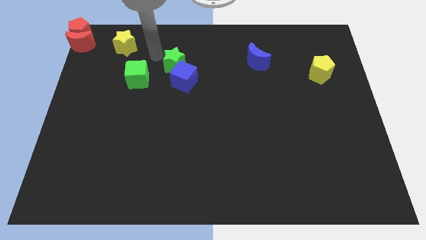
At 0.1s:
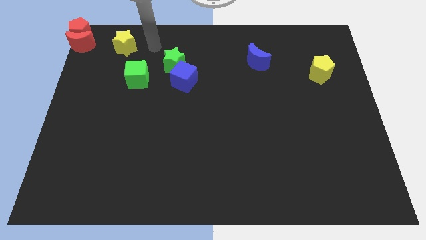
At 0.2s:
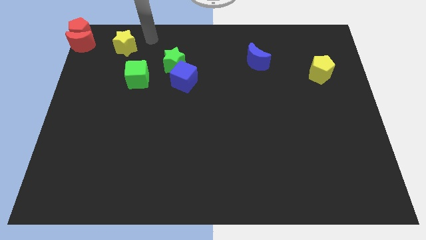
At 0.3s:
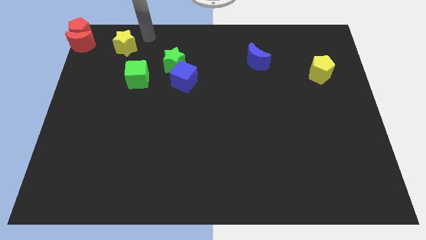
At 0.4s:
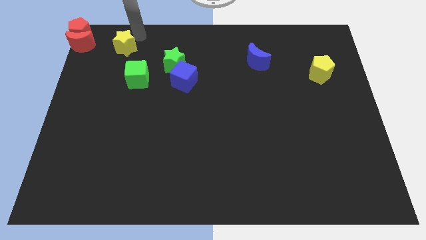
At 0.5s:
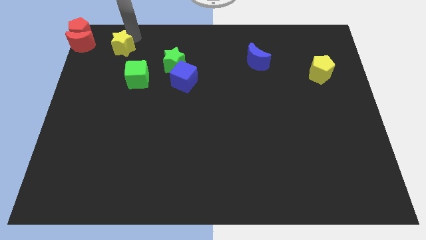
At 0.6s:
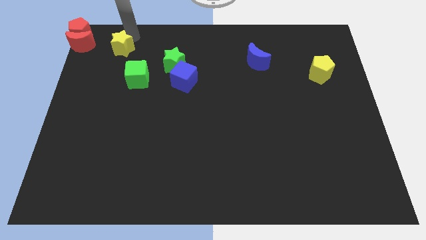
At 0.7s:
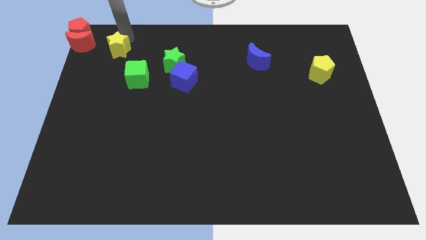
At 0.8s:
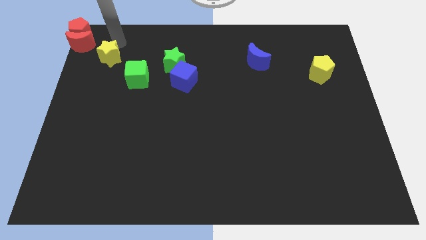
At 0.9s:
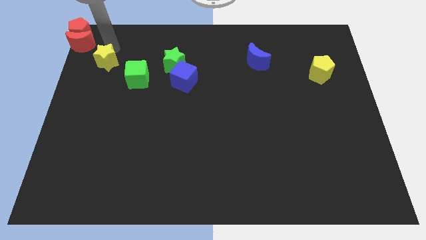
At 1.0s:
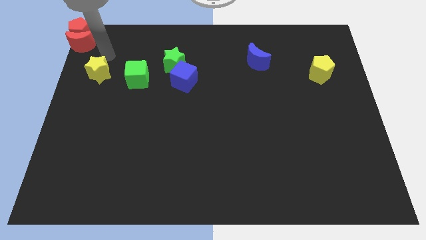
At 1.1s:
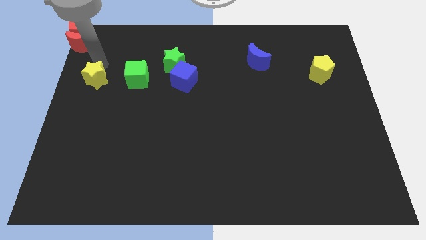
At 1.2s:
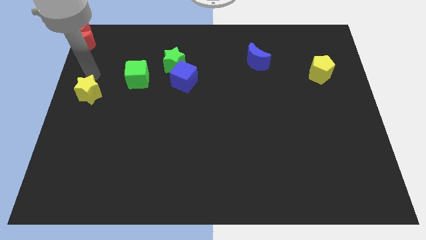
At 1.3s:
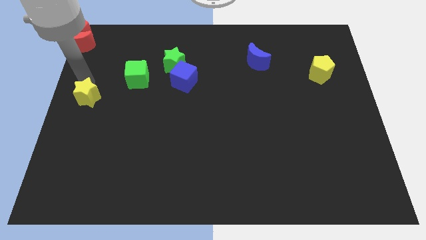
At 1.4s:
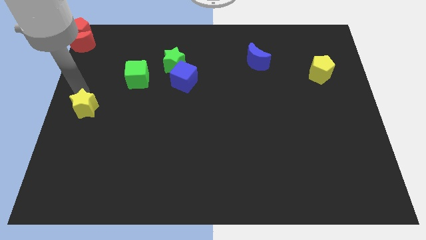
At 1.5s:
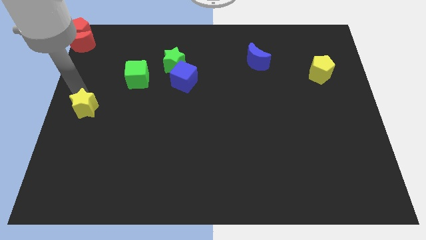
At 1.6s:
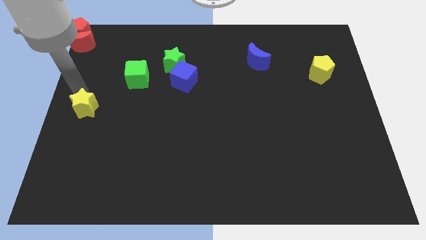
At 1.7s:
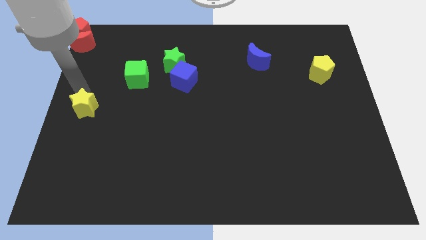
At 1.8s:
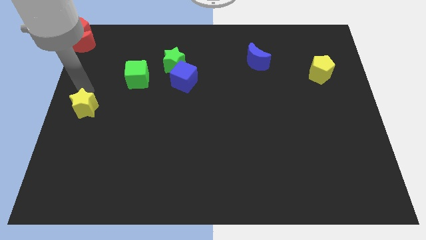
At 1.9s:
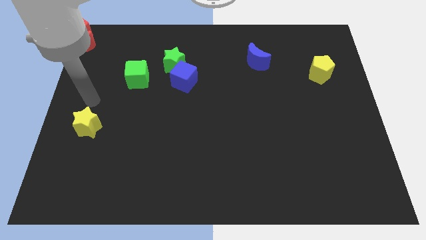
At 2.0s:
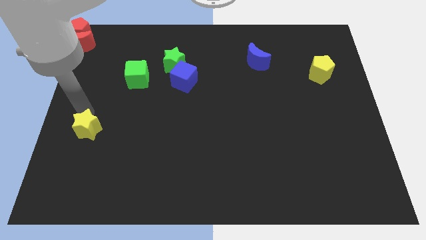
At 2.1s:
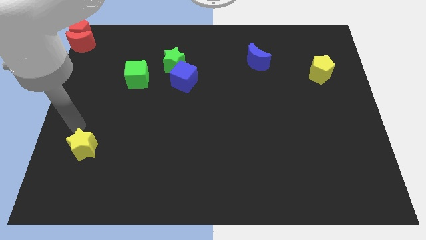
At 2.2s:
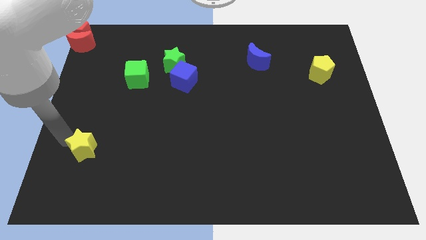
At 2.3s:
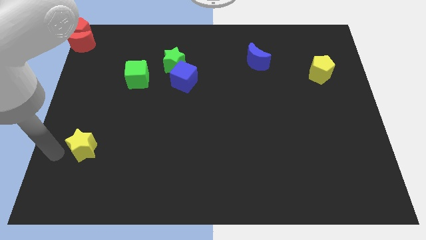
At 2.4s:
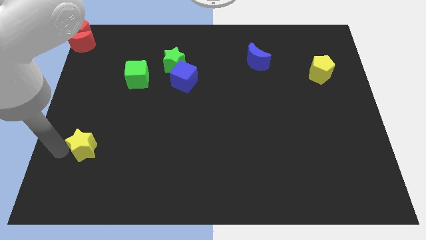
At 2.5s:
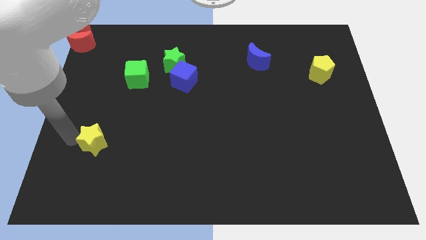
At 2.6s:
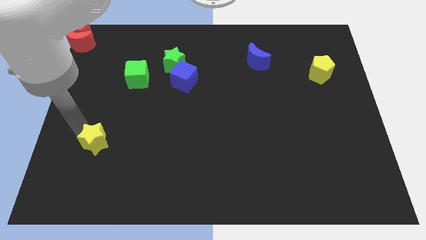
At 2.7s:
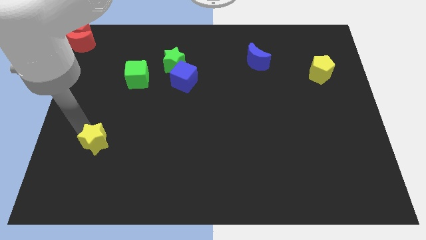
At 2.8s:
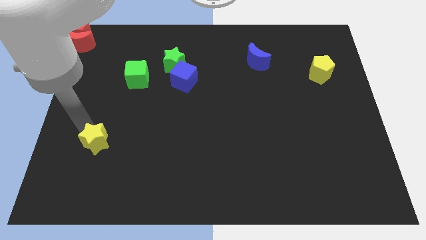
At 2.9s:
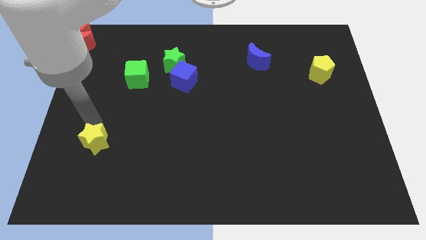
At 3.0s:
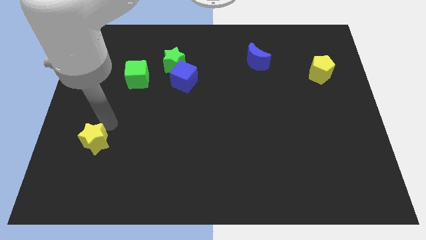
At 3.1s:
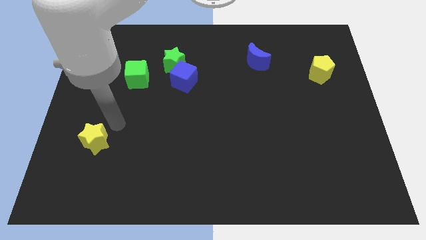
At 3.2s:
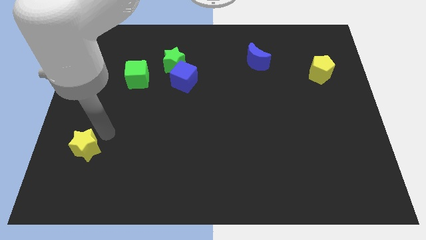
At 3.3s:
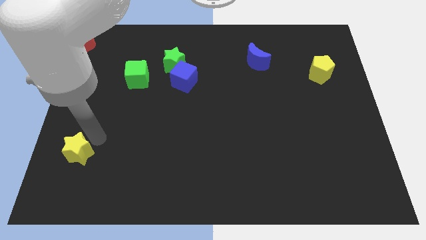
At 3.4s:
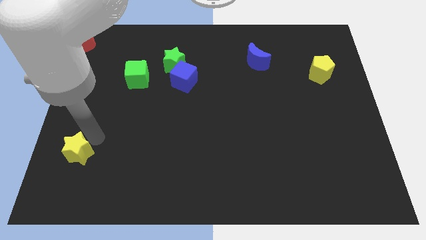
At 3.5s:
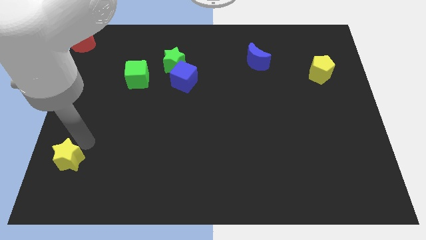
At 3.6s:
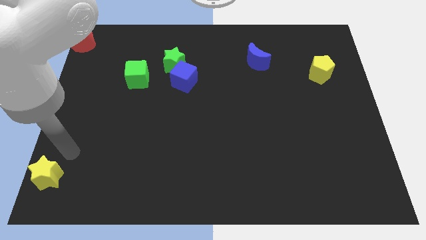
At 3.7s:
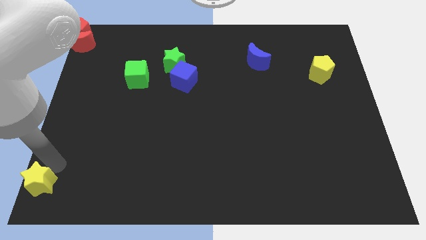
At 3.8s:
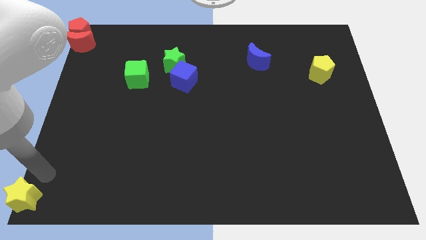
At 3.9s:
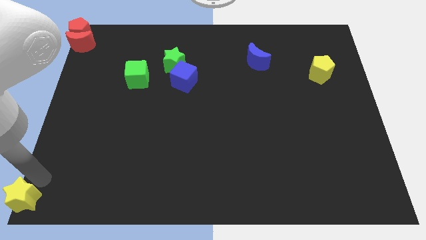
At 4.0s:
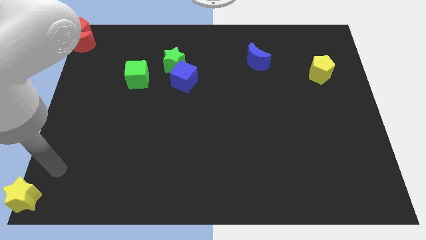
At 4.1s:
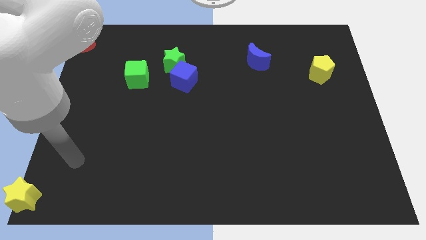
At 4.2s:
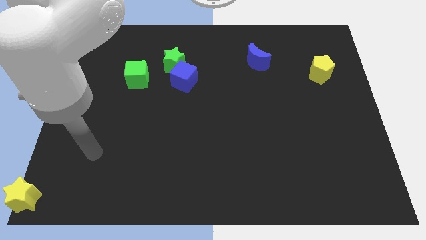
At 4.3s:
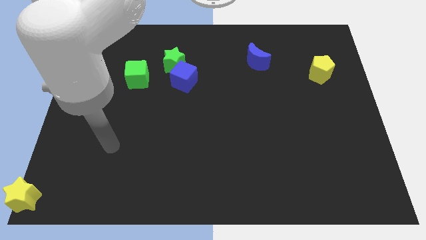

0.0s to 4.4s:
push the yellow star to the bottom left to the board

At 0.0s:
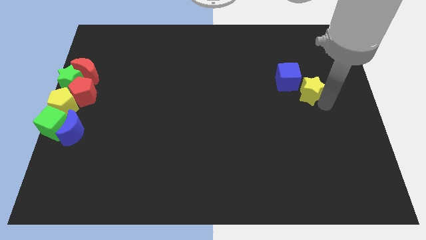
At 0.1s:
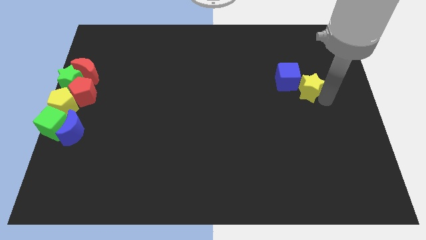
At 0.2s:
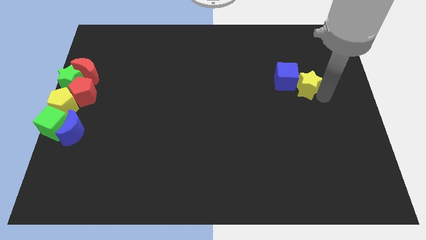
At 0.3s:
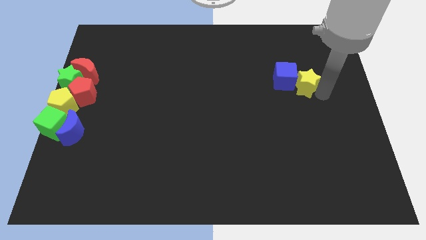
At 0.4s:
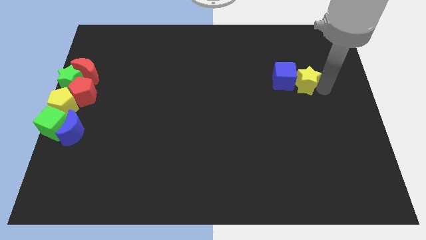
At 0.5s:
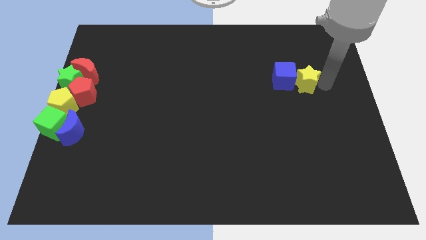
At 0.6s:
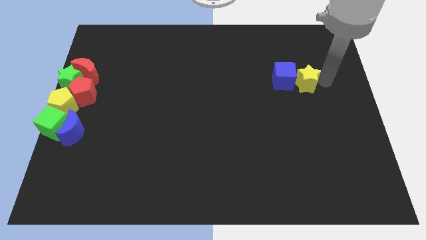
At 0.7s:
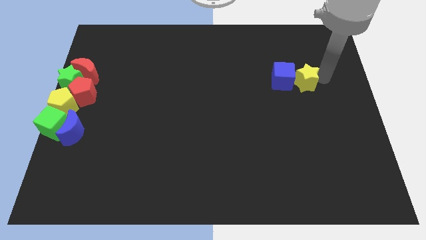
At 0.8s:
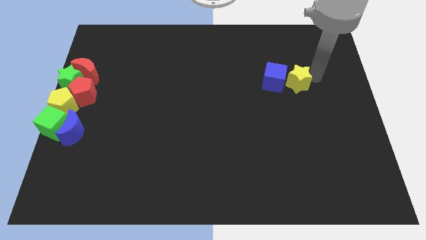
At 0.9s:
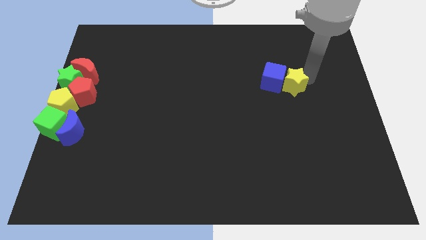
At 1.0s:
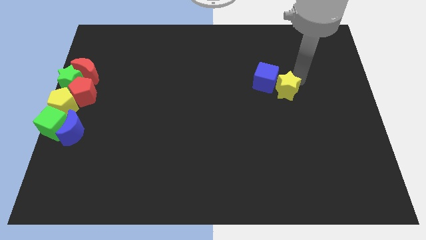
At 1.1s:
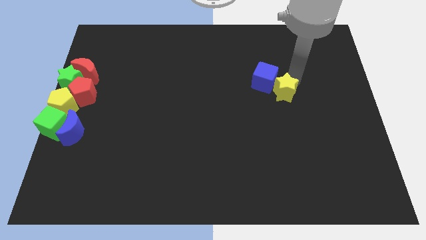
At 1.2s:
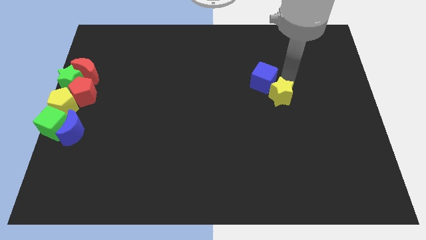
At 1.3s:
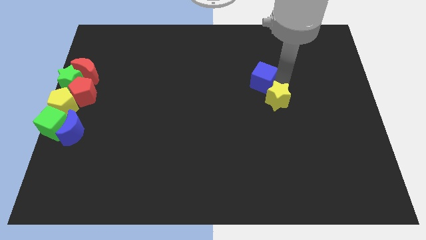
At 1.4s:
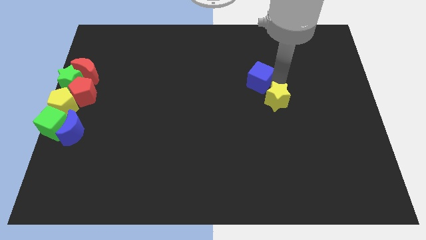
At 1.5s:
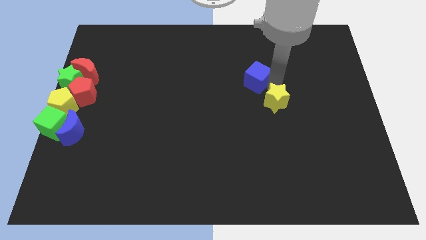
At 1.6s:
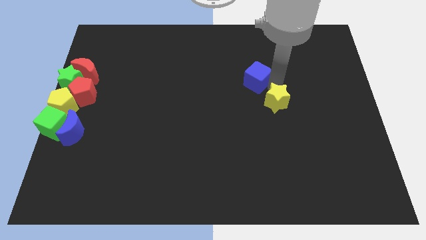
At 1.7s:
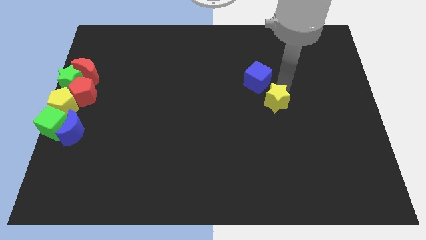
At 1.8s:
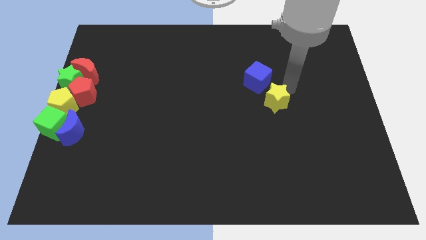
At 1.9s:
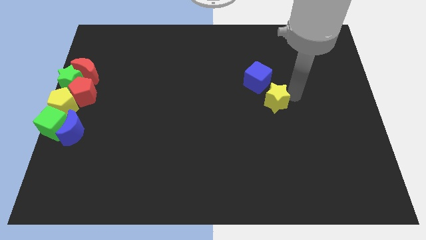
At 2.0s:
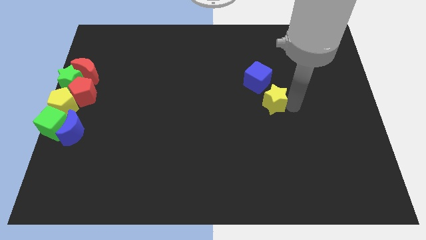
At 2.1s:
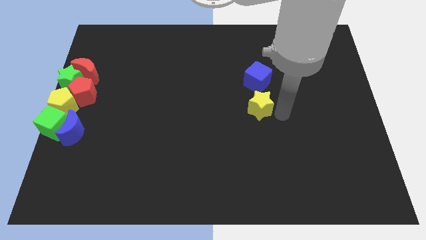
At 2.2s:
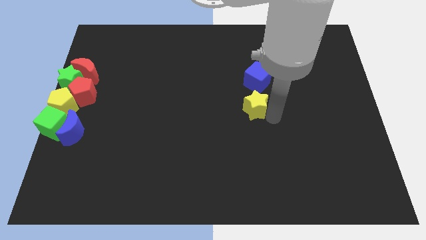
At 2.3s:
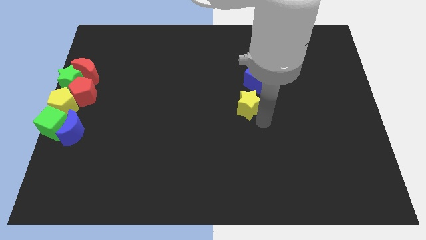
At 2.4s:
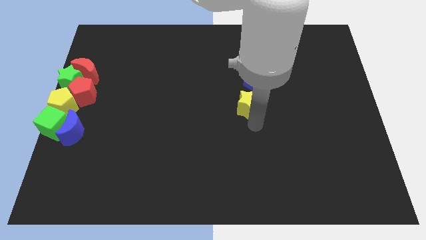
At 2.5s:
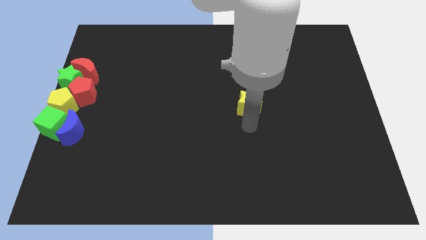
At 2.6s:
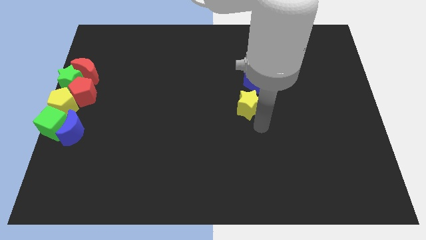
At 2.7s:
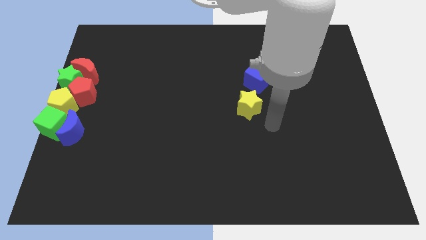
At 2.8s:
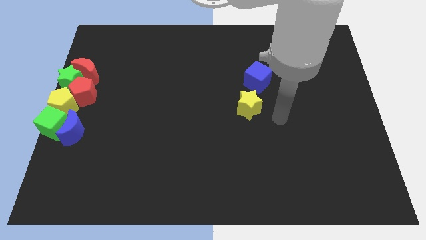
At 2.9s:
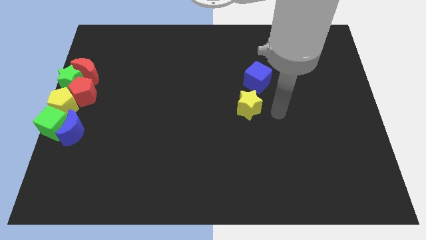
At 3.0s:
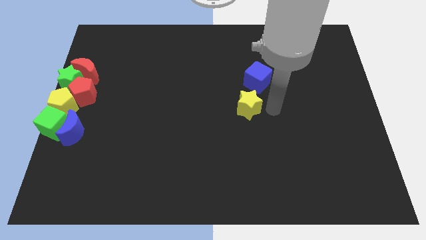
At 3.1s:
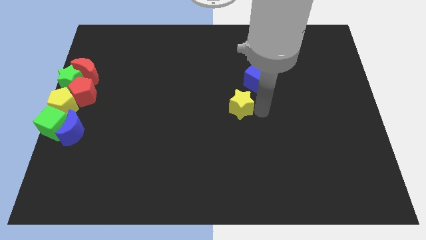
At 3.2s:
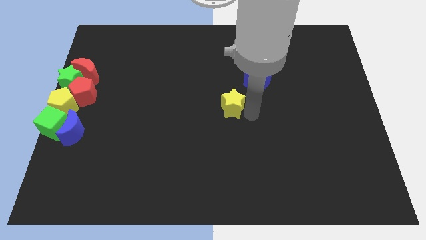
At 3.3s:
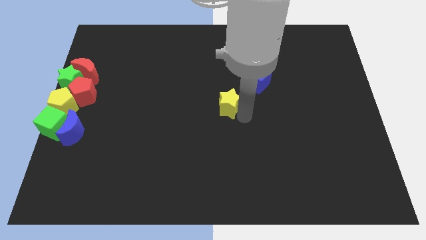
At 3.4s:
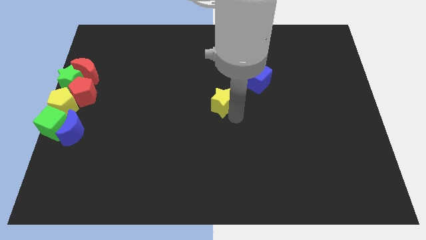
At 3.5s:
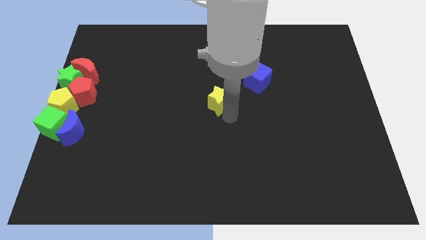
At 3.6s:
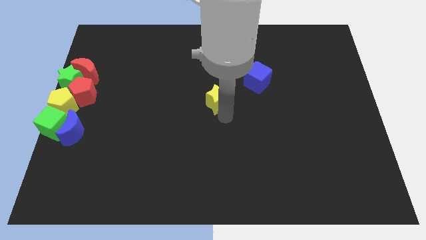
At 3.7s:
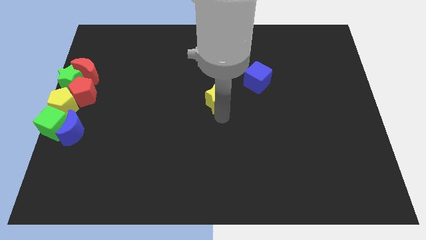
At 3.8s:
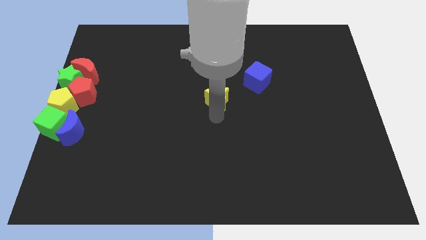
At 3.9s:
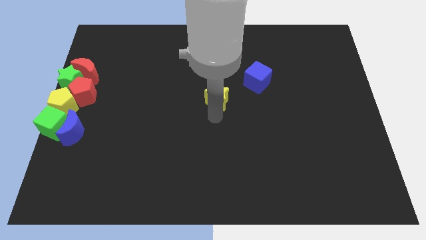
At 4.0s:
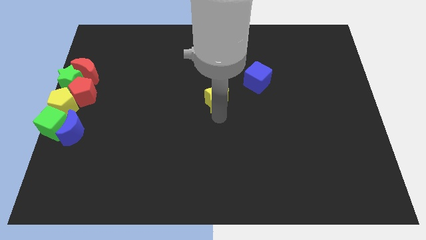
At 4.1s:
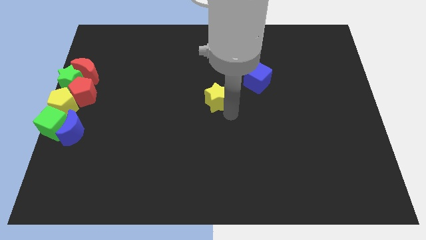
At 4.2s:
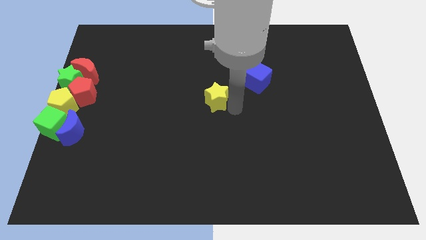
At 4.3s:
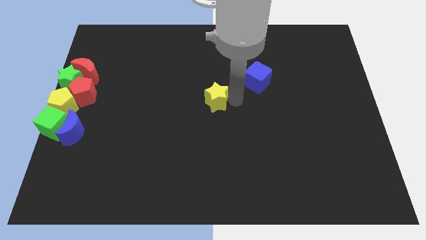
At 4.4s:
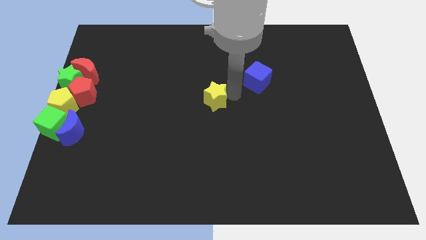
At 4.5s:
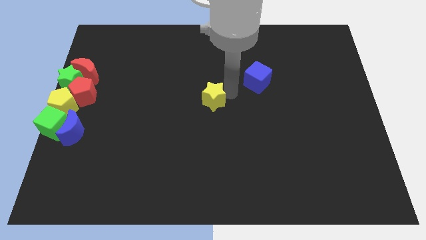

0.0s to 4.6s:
move the yellow star to the center of the board

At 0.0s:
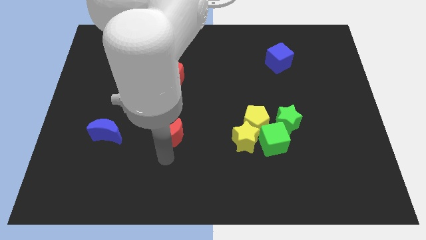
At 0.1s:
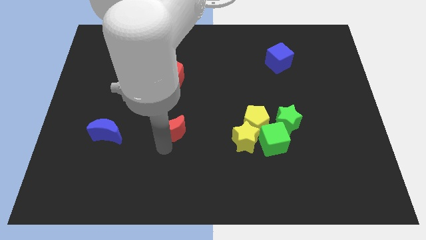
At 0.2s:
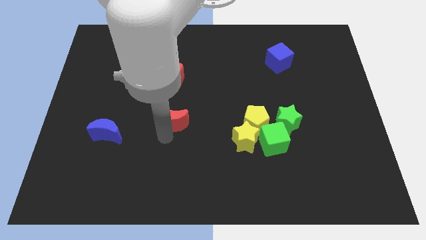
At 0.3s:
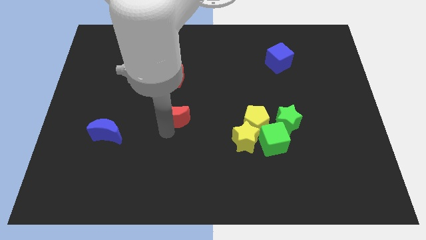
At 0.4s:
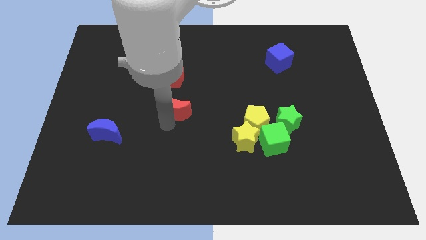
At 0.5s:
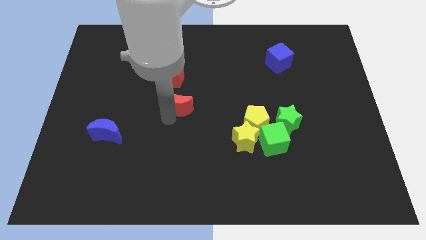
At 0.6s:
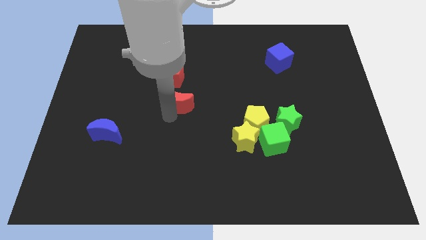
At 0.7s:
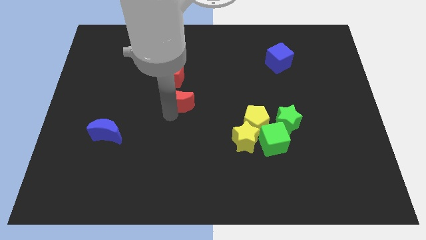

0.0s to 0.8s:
place the red crescent below the red pentagon
